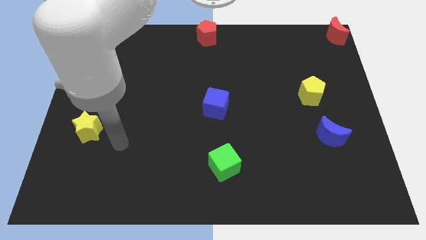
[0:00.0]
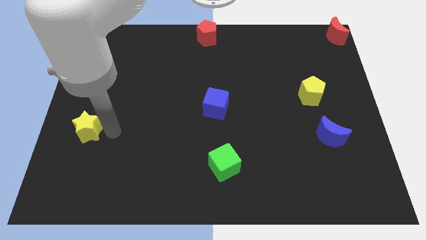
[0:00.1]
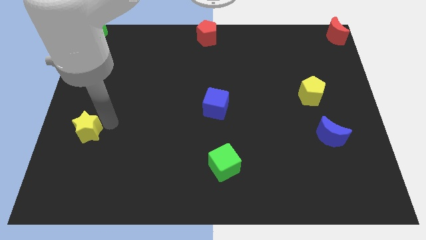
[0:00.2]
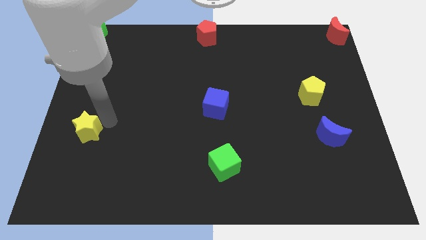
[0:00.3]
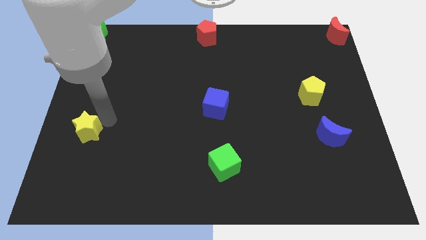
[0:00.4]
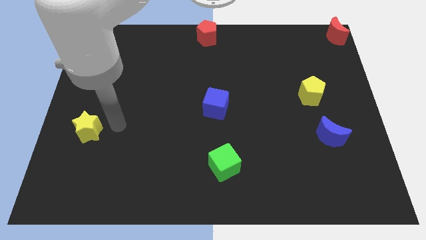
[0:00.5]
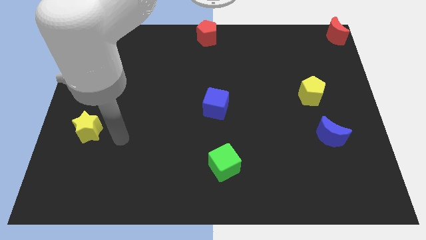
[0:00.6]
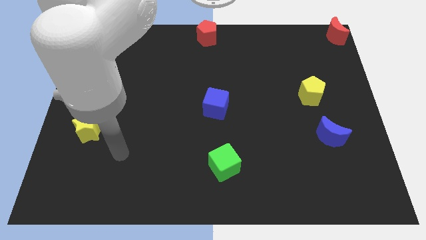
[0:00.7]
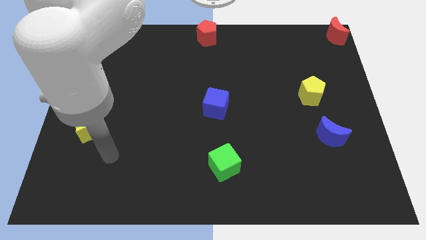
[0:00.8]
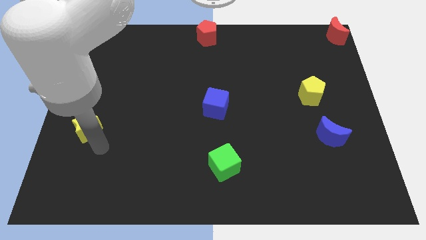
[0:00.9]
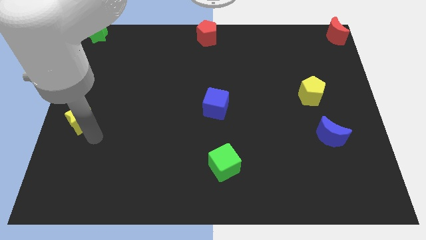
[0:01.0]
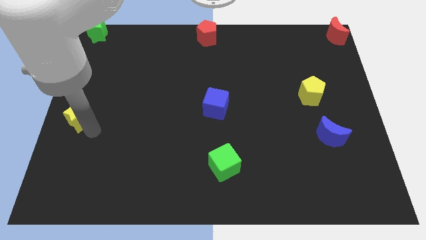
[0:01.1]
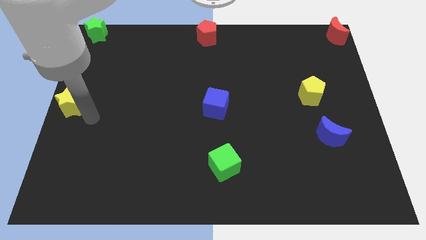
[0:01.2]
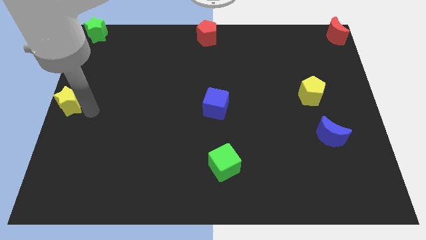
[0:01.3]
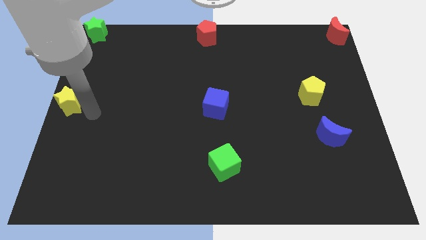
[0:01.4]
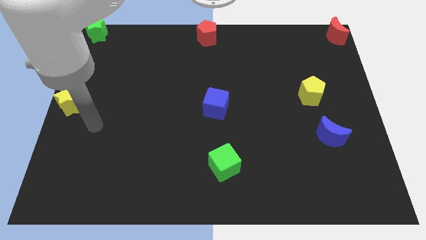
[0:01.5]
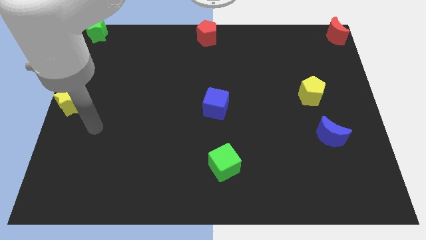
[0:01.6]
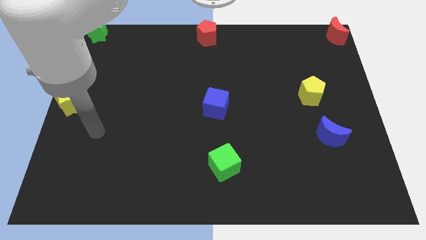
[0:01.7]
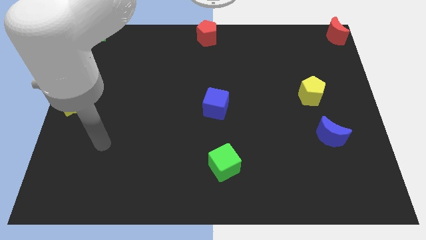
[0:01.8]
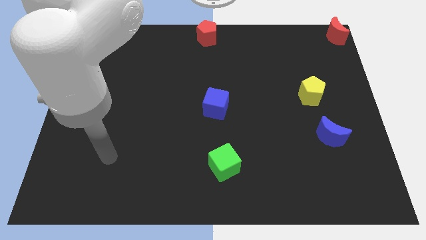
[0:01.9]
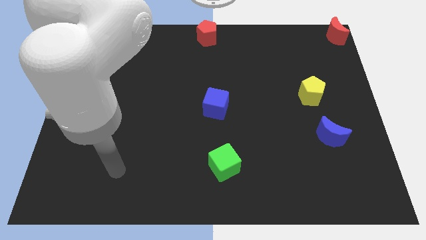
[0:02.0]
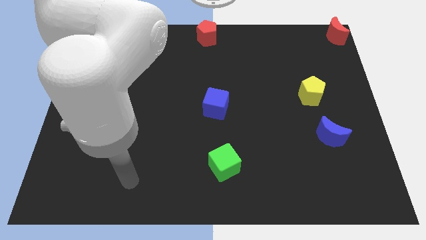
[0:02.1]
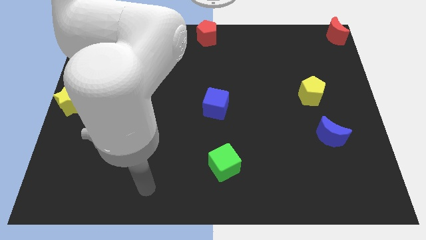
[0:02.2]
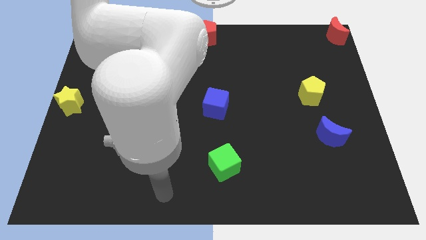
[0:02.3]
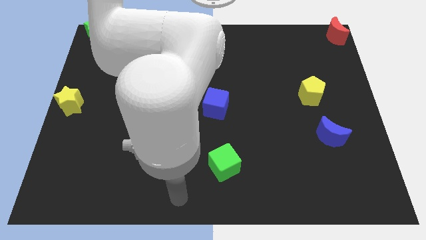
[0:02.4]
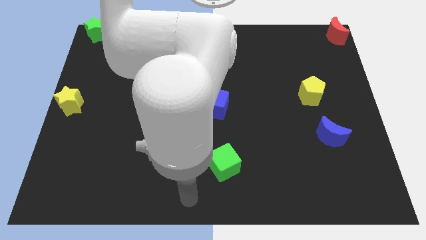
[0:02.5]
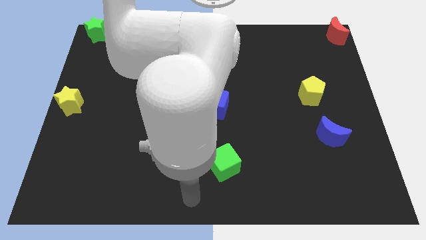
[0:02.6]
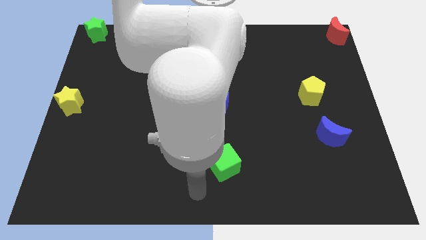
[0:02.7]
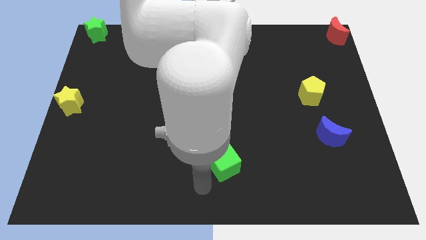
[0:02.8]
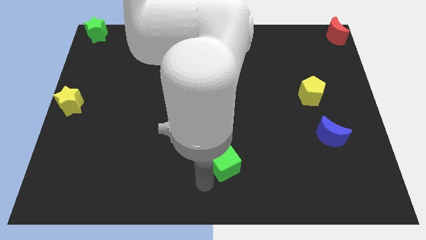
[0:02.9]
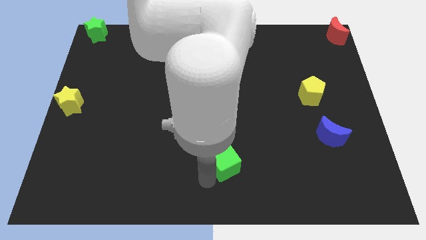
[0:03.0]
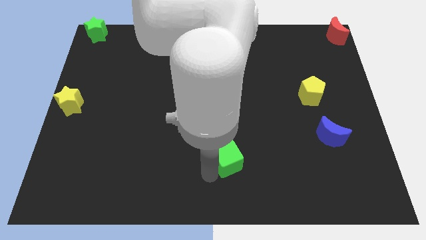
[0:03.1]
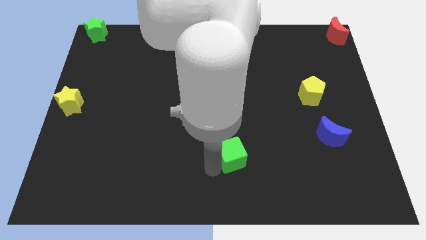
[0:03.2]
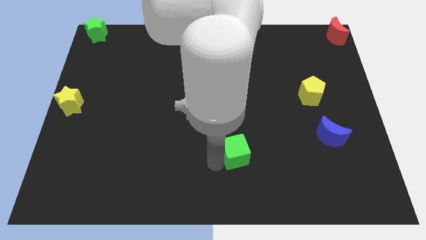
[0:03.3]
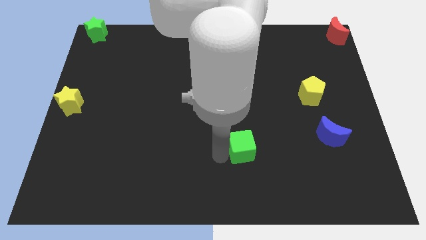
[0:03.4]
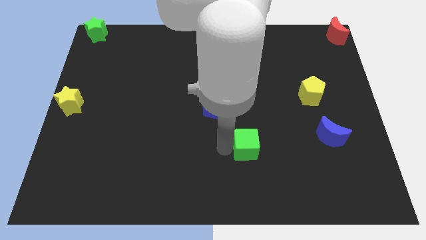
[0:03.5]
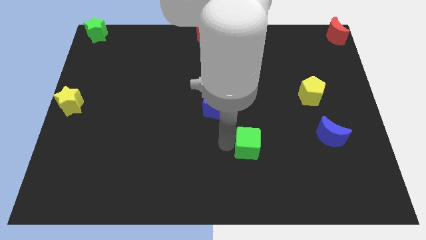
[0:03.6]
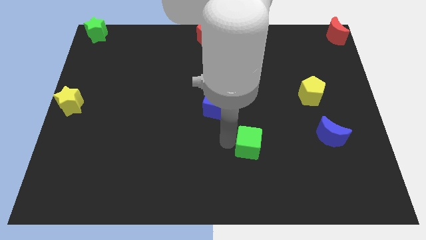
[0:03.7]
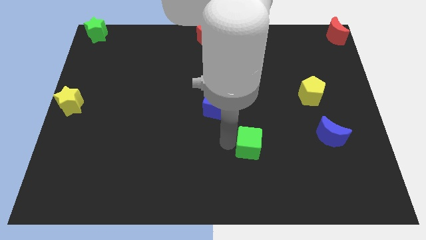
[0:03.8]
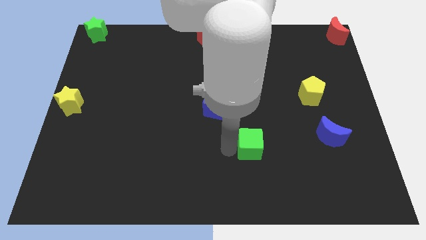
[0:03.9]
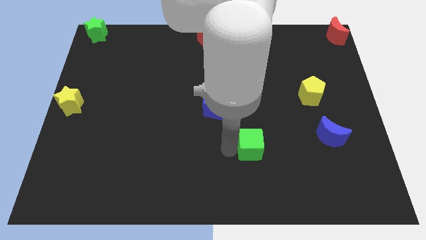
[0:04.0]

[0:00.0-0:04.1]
move the green cube towards the top right

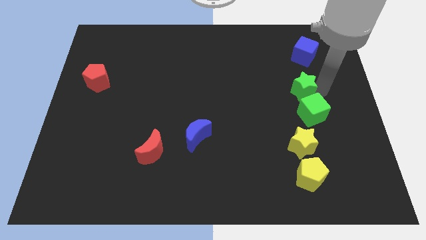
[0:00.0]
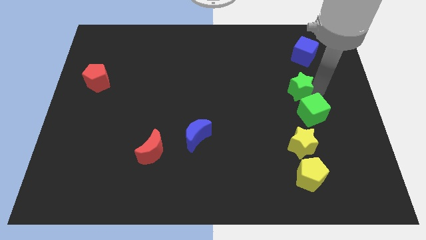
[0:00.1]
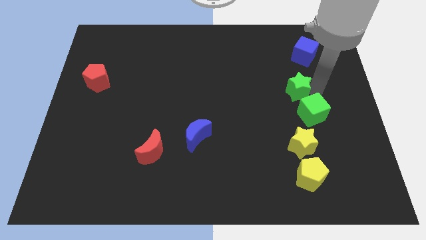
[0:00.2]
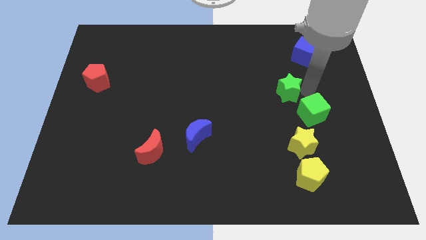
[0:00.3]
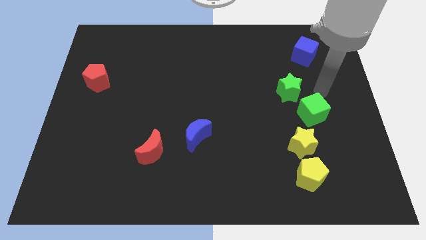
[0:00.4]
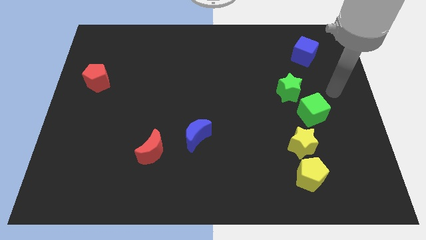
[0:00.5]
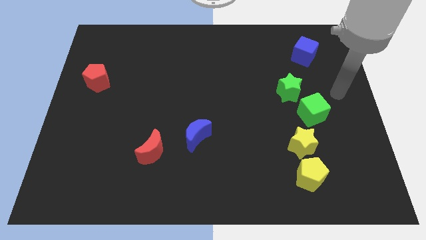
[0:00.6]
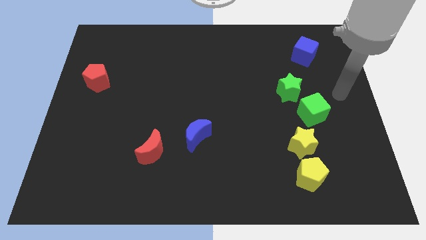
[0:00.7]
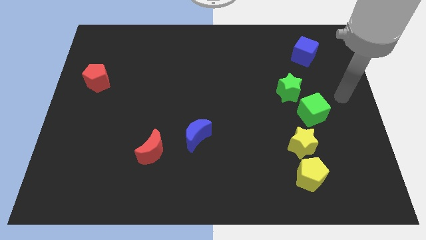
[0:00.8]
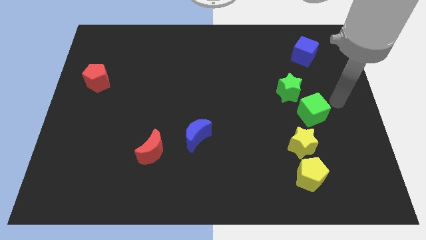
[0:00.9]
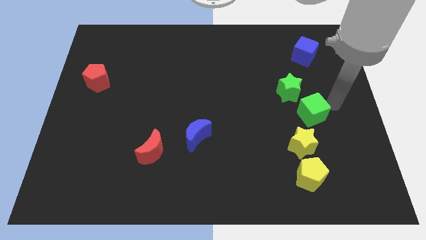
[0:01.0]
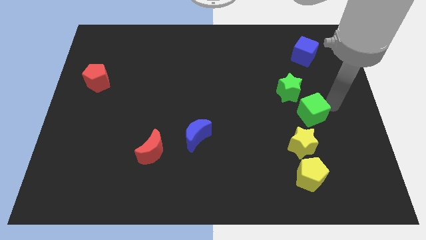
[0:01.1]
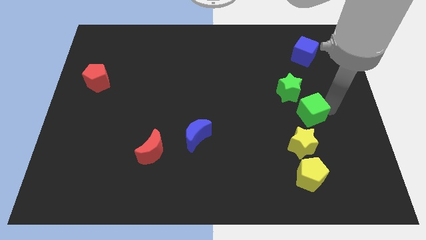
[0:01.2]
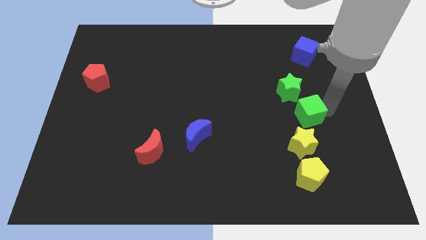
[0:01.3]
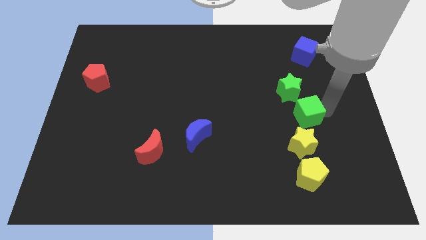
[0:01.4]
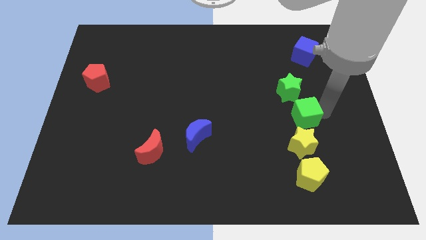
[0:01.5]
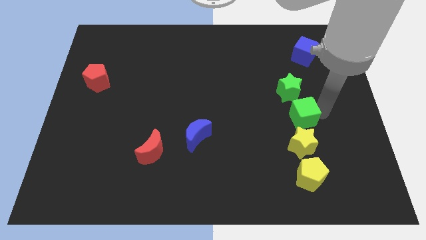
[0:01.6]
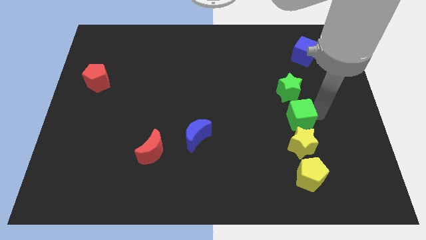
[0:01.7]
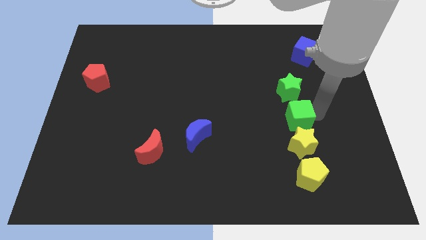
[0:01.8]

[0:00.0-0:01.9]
move the green blocks to the top of the yellow star

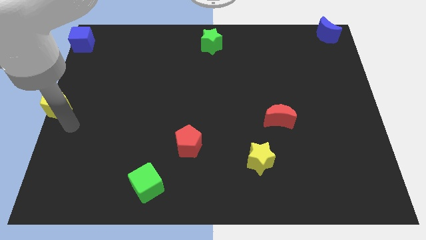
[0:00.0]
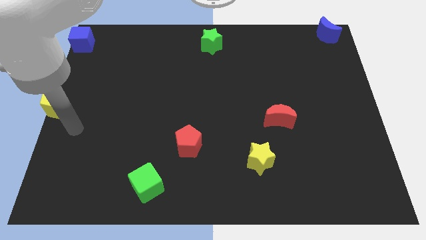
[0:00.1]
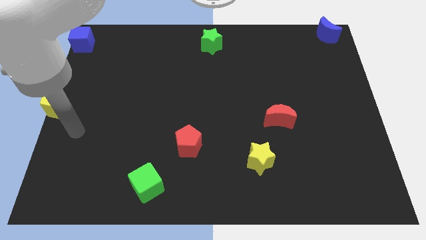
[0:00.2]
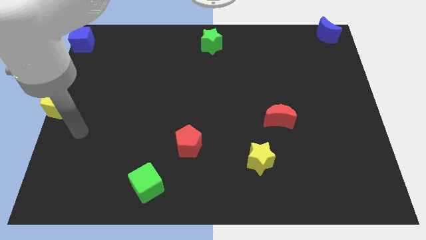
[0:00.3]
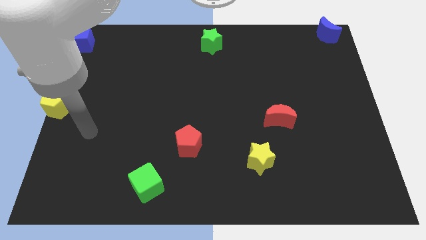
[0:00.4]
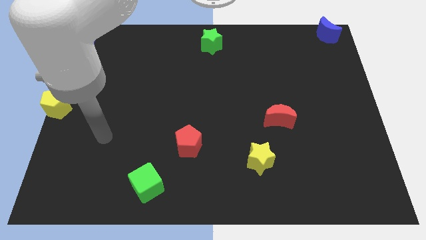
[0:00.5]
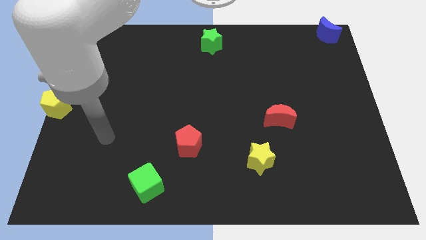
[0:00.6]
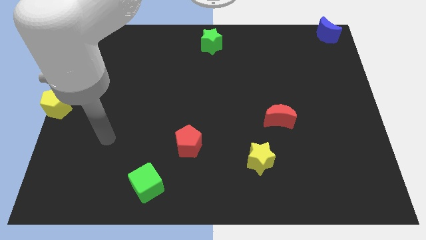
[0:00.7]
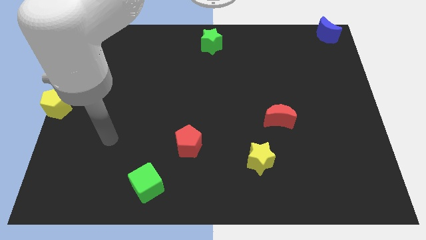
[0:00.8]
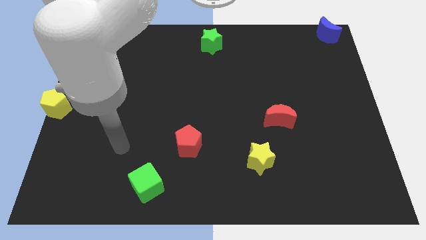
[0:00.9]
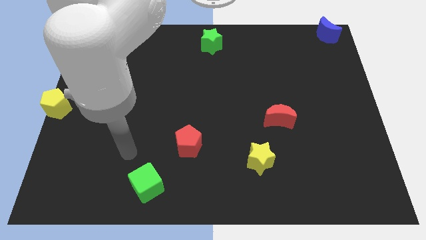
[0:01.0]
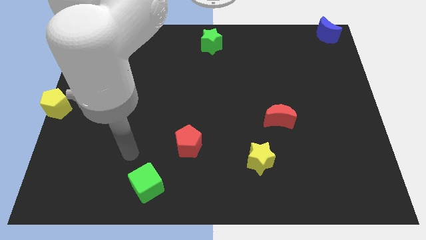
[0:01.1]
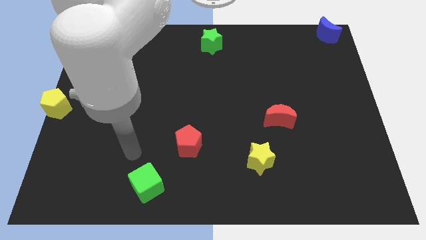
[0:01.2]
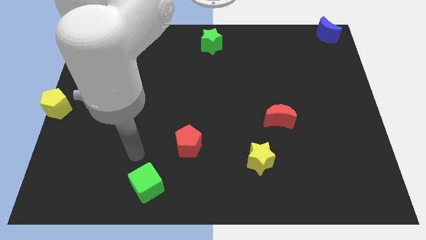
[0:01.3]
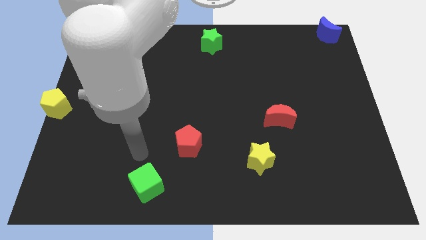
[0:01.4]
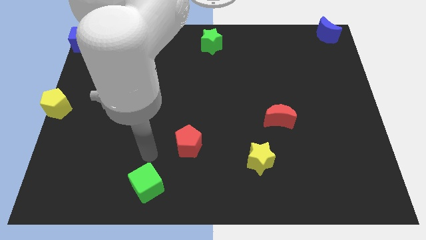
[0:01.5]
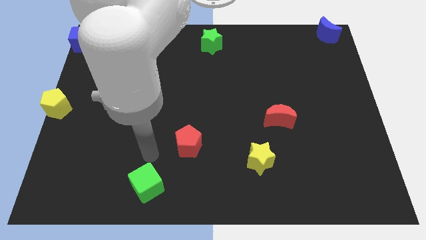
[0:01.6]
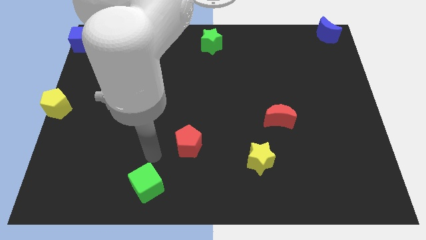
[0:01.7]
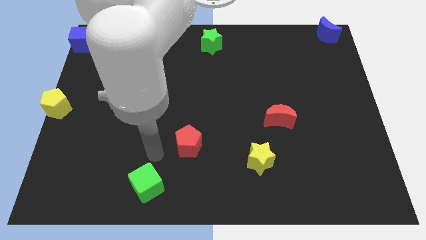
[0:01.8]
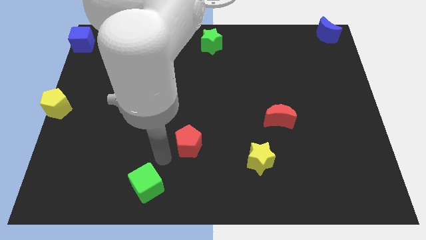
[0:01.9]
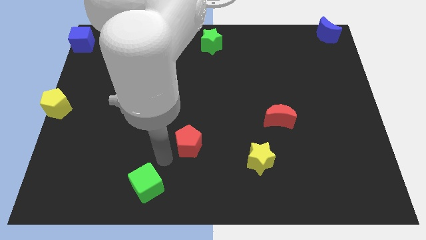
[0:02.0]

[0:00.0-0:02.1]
go away from the yellow pentagon

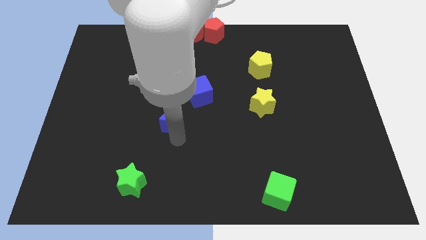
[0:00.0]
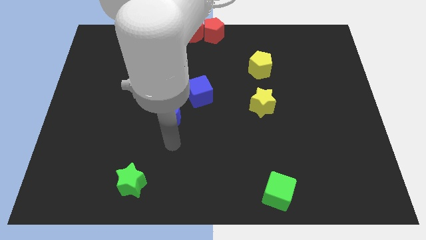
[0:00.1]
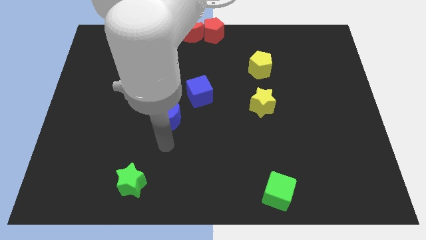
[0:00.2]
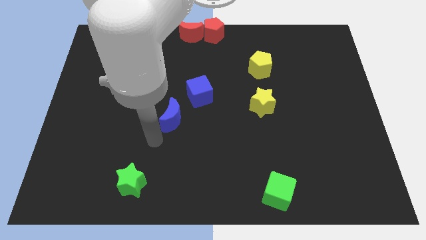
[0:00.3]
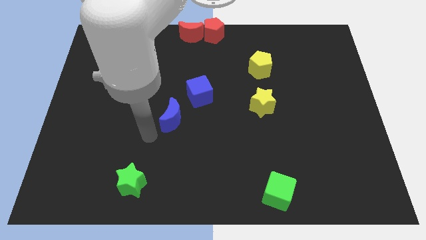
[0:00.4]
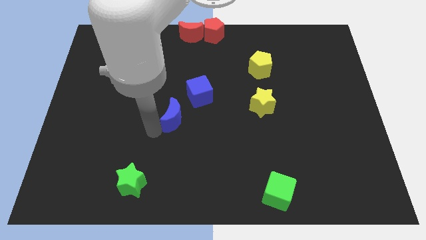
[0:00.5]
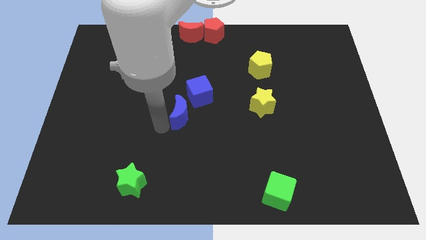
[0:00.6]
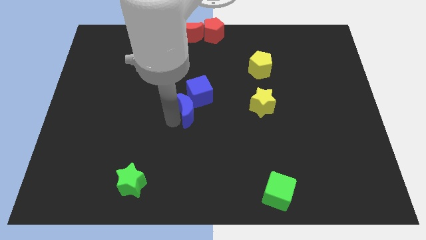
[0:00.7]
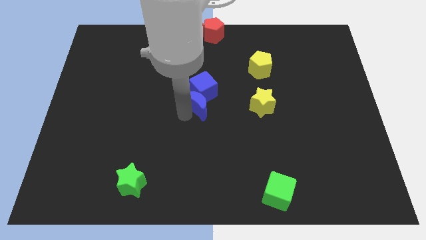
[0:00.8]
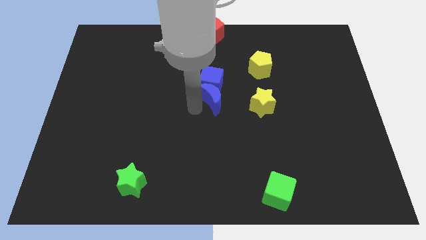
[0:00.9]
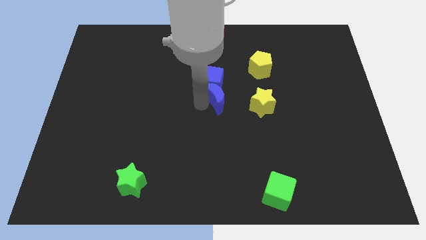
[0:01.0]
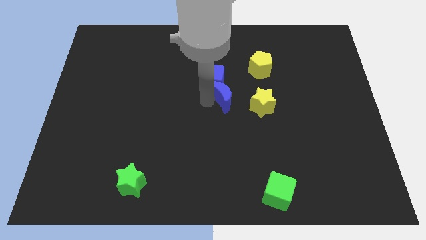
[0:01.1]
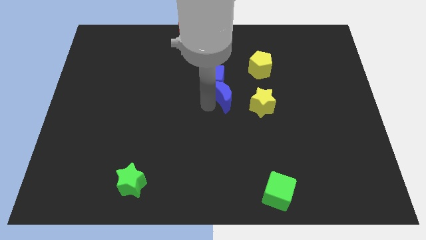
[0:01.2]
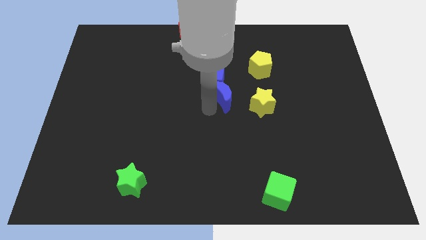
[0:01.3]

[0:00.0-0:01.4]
push the blue crescent into the blue cube
